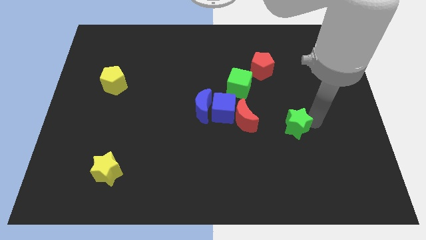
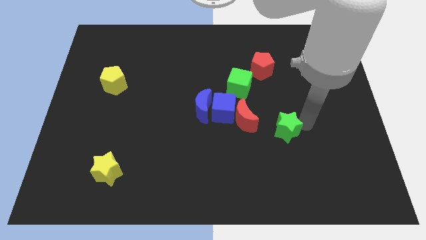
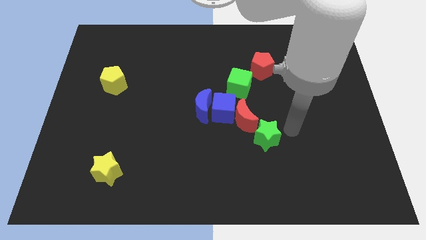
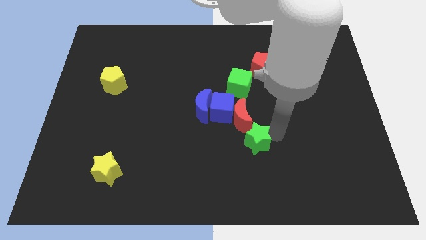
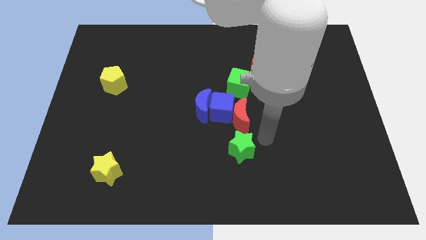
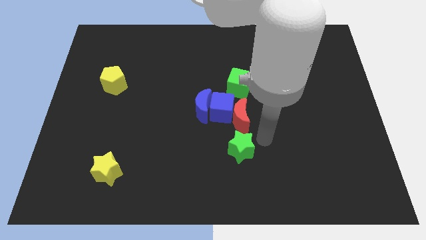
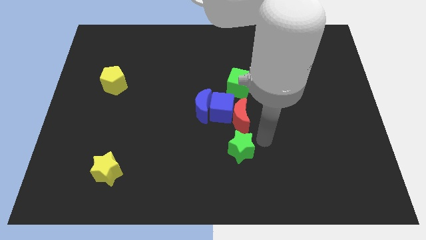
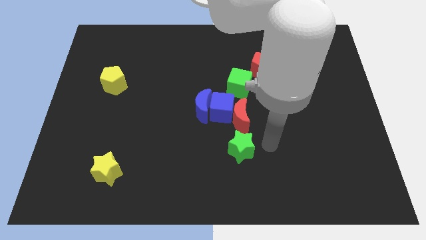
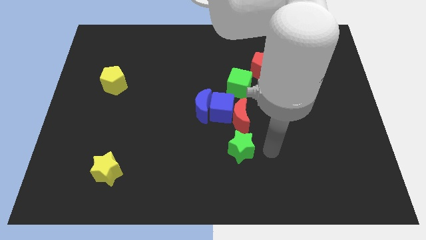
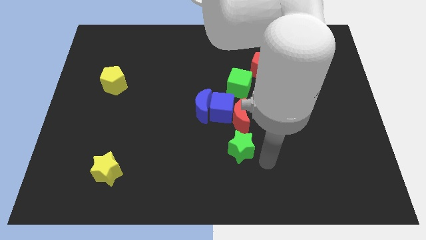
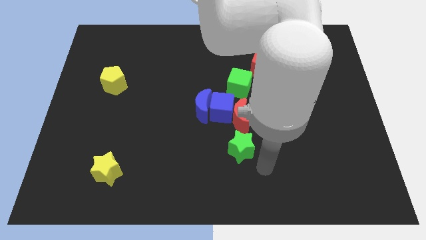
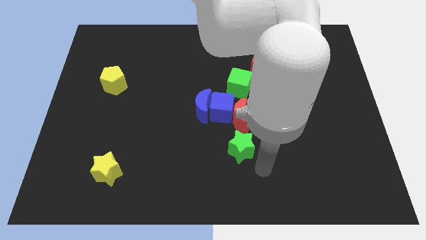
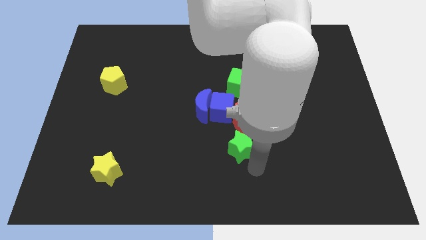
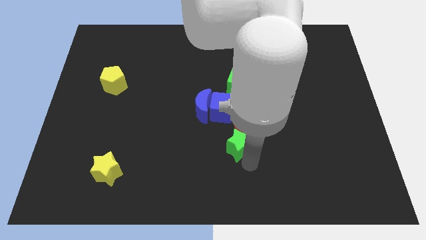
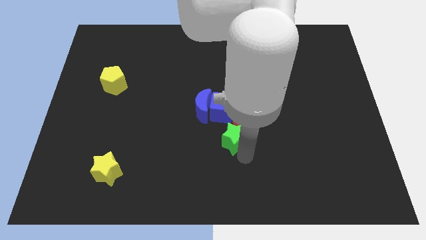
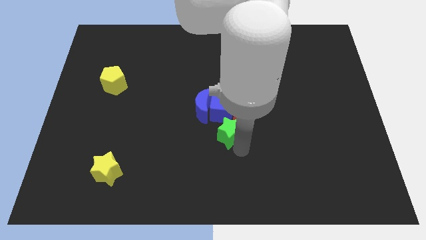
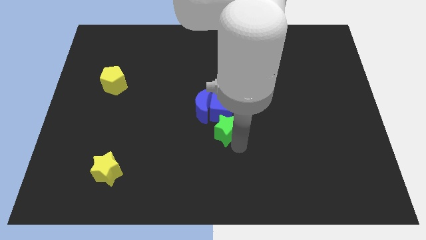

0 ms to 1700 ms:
place the green star below the blue cube

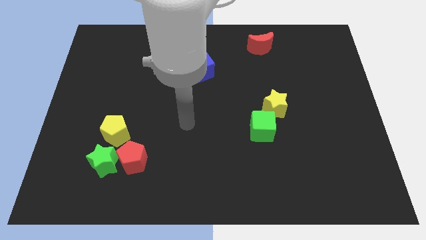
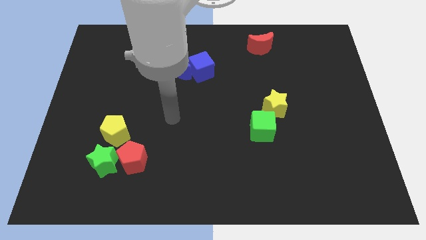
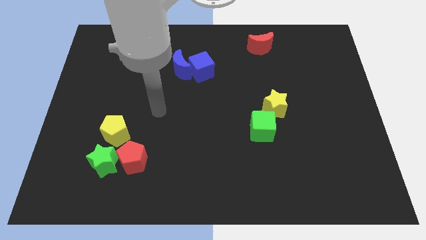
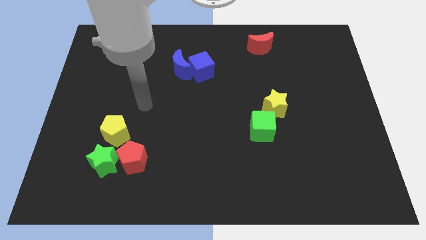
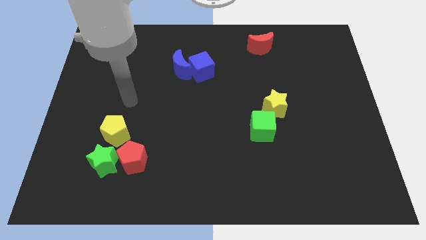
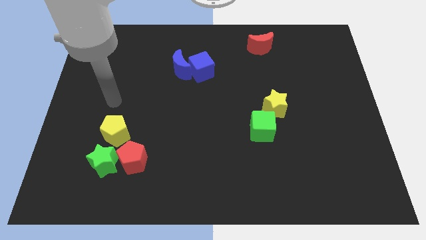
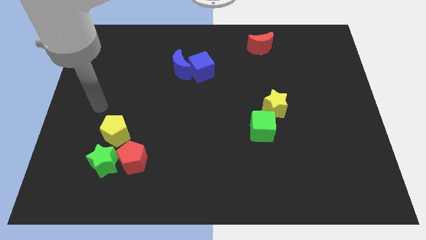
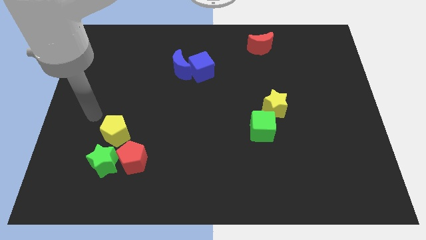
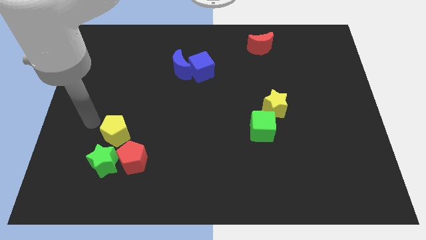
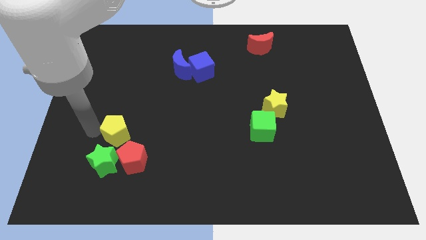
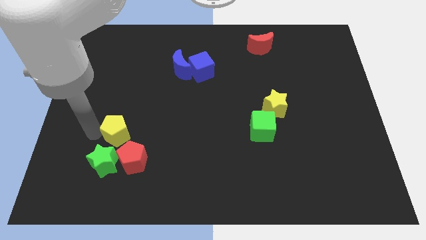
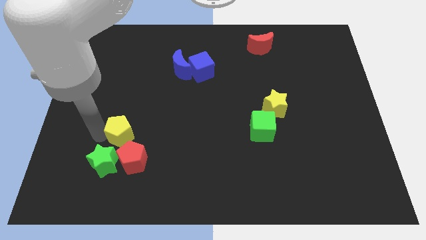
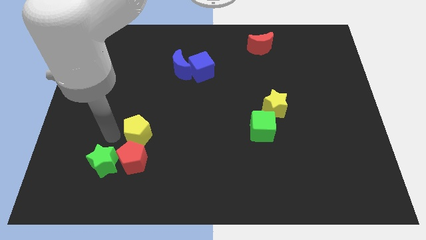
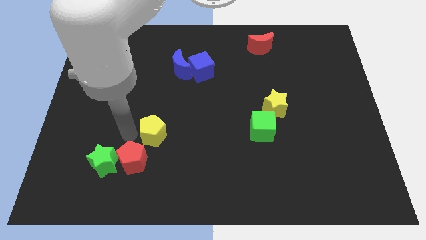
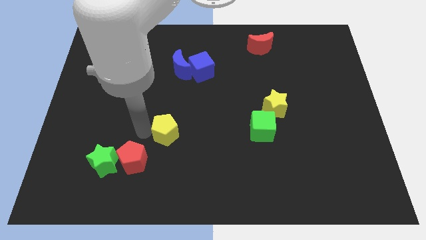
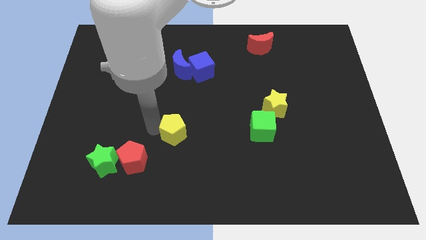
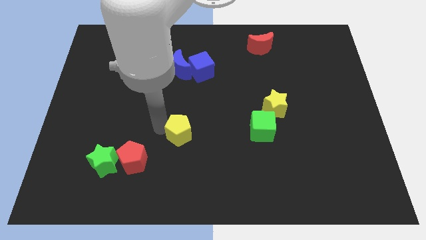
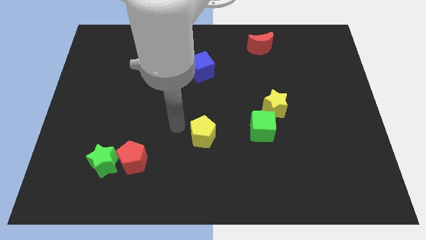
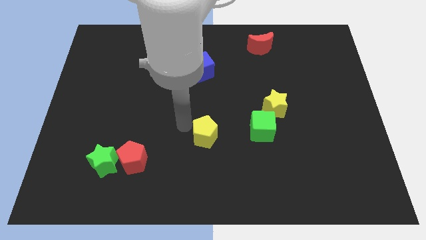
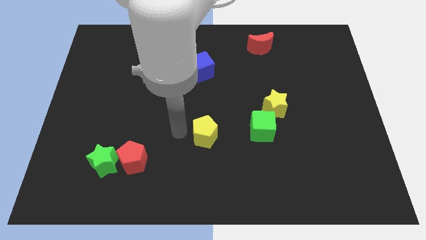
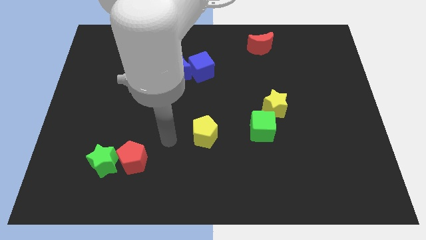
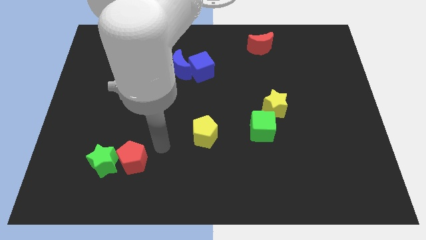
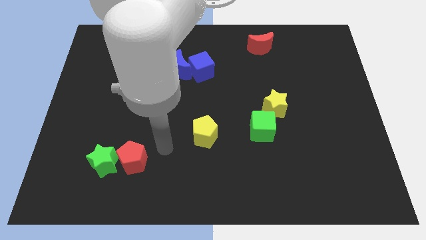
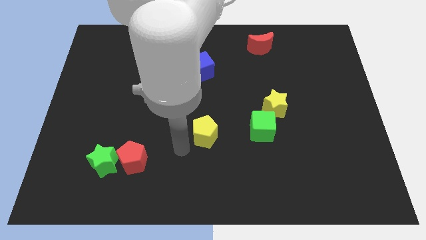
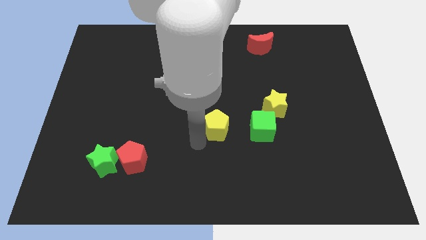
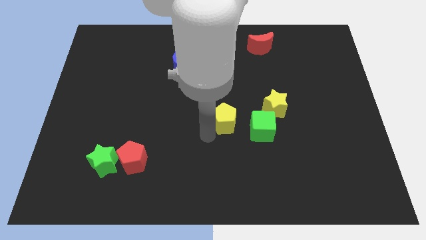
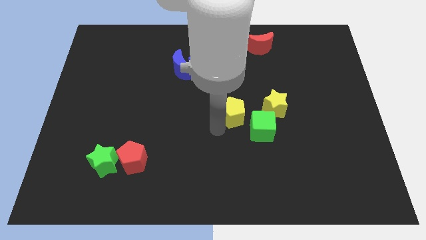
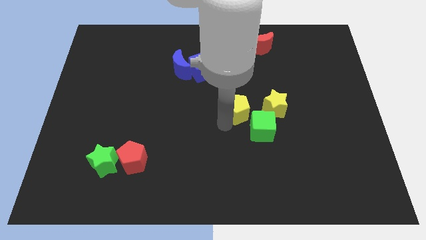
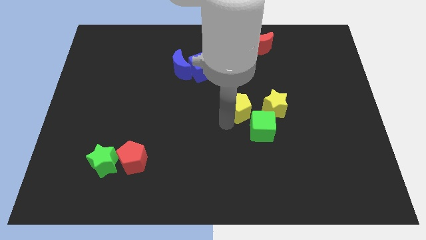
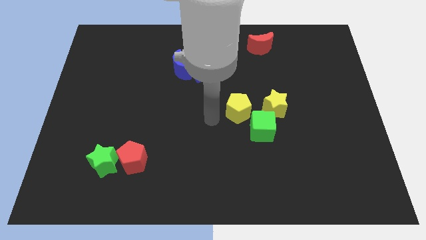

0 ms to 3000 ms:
move the yellow pentagon left to the yellow star

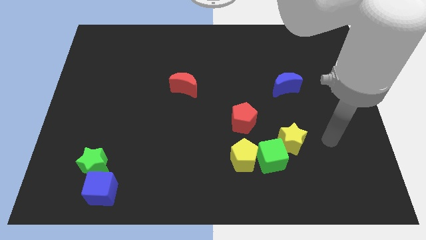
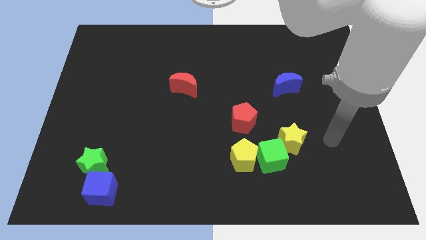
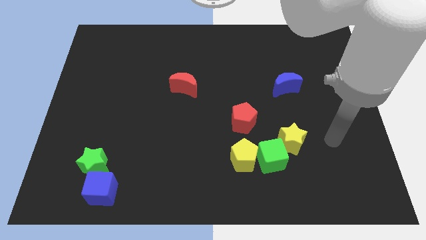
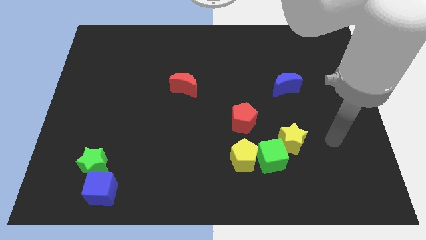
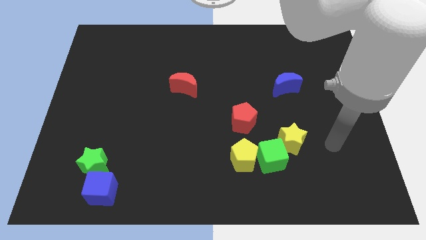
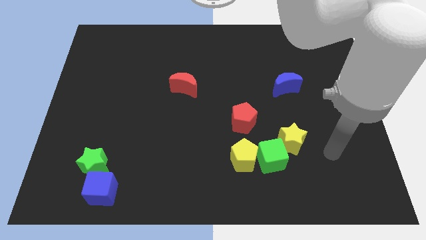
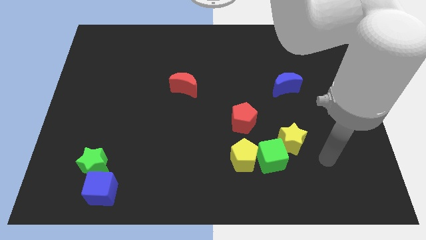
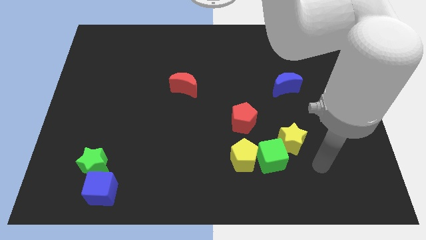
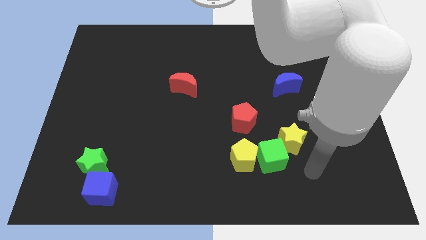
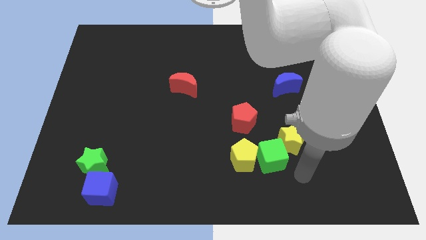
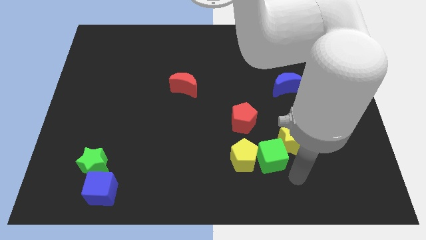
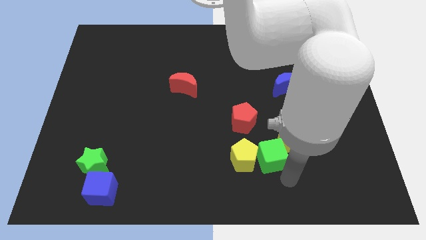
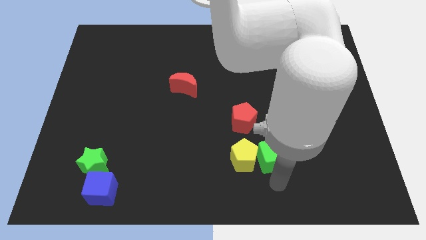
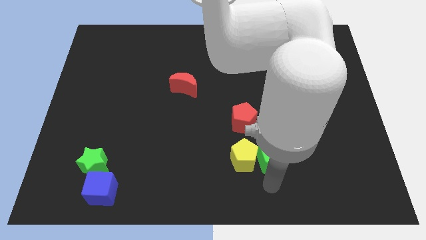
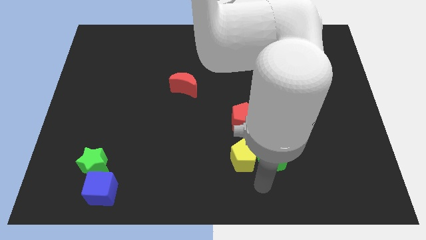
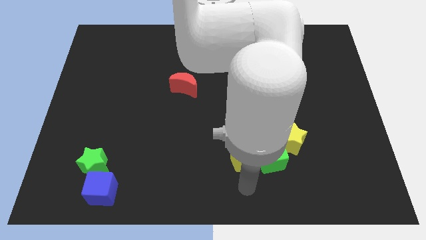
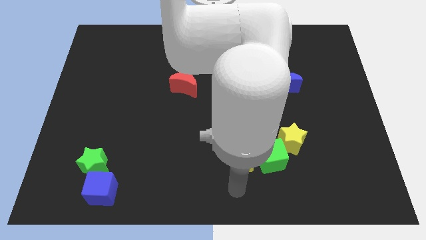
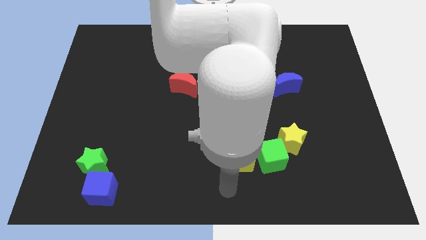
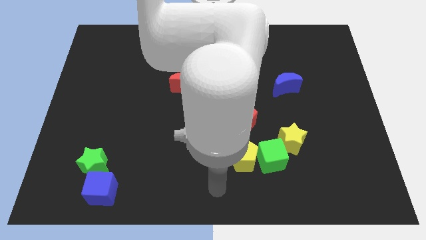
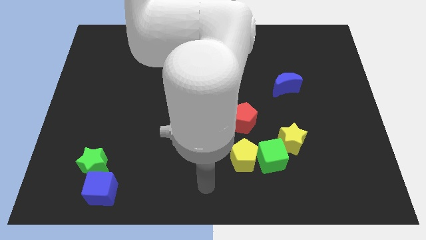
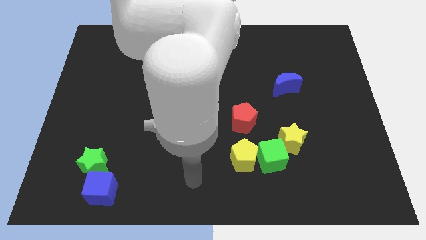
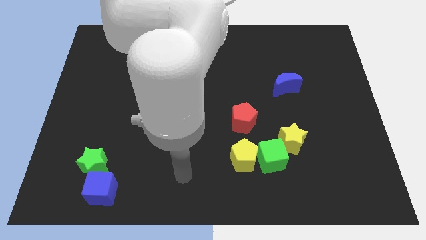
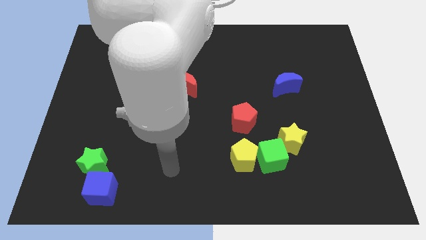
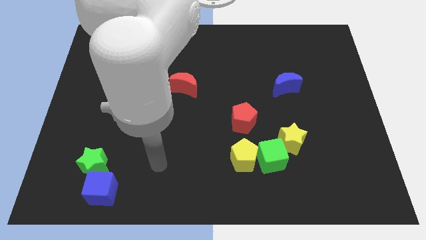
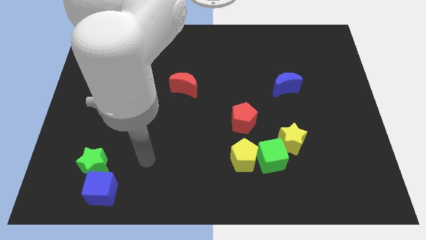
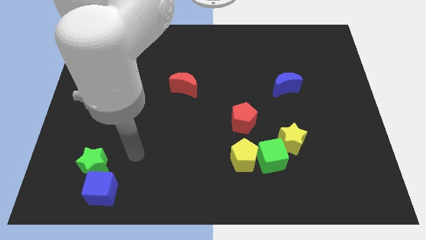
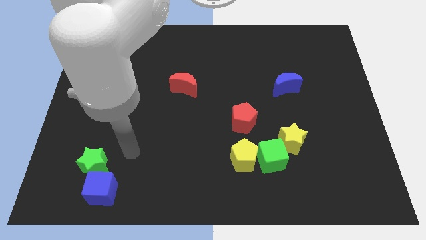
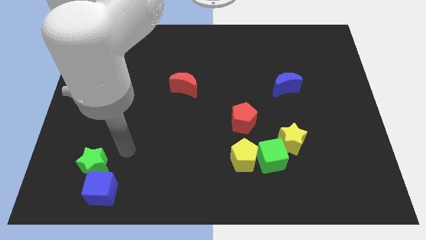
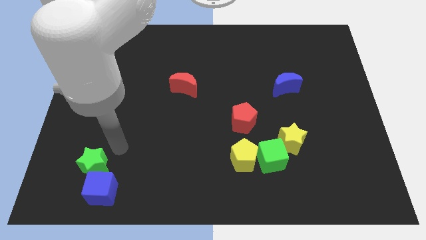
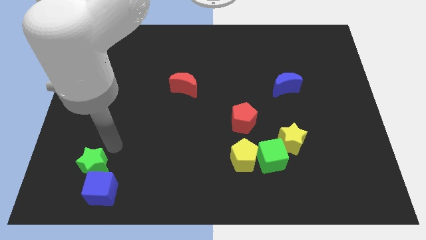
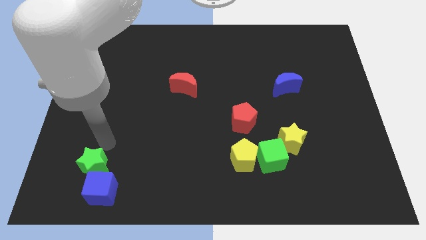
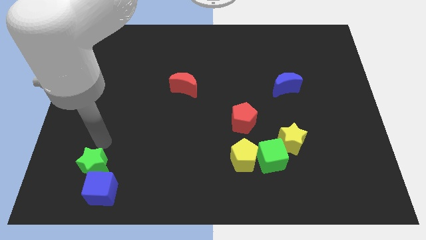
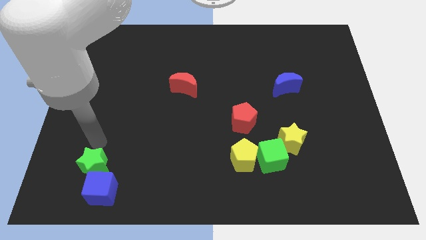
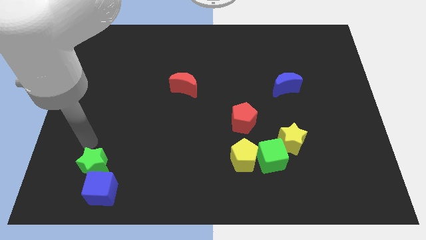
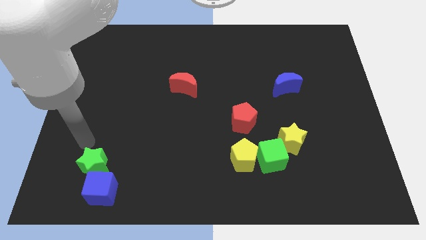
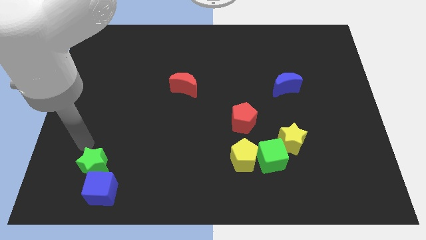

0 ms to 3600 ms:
move your arm above the green star

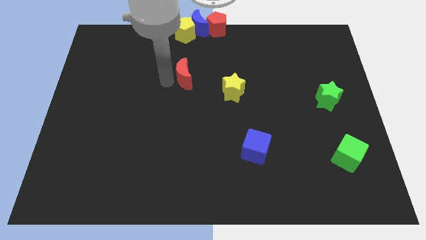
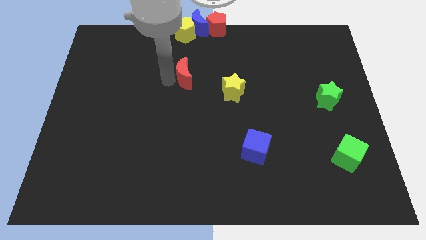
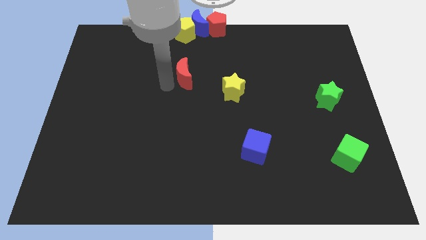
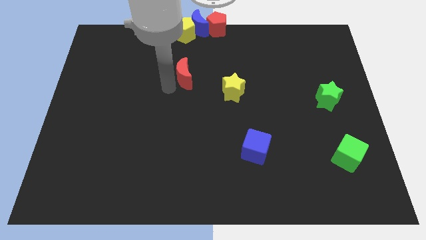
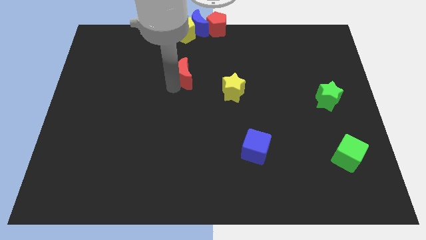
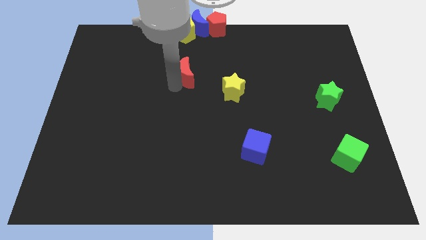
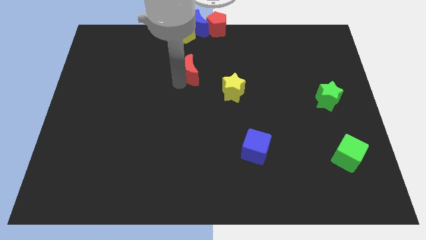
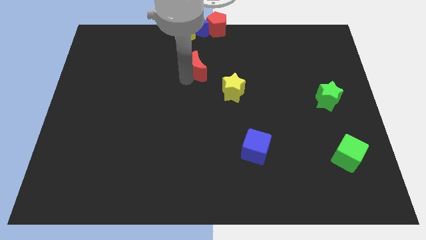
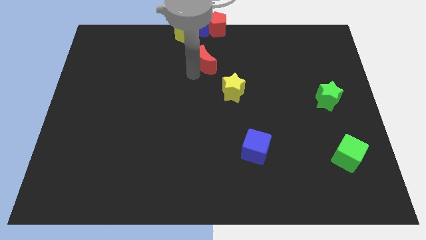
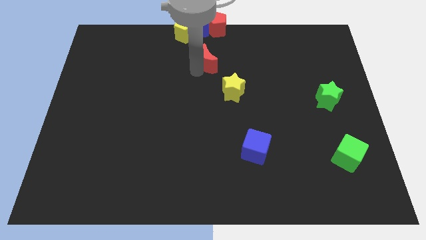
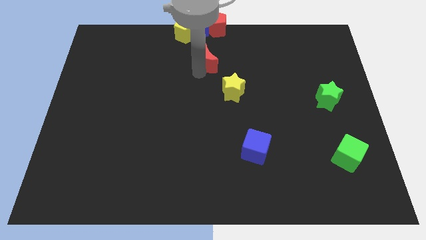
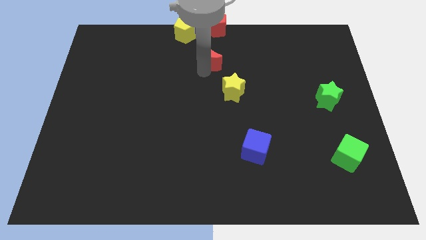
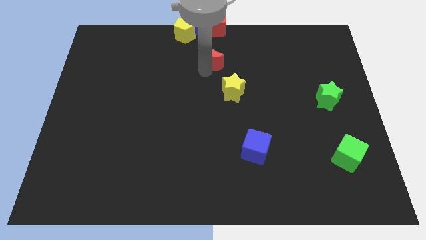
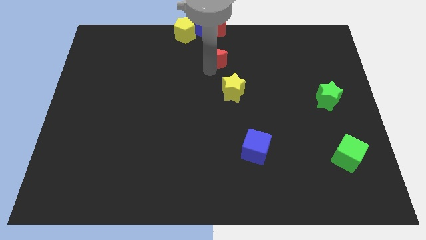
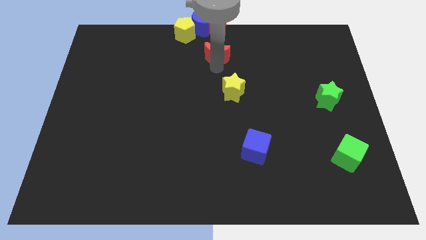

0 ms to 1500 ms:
place the red moon diagonally in between the blue moon and yellow star
